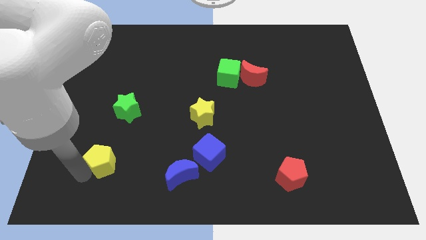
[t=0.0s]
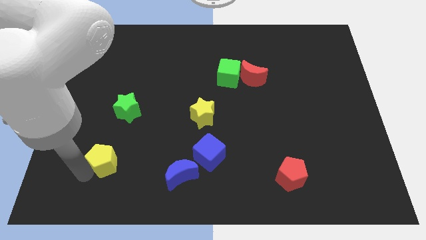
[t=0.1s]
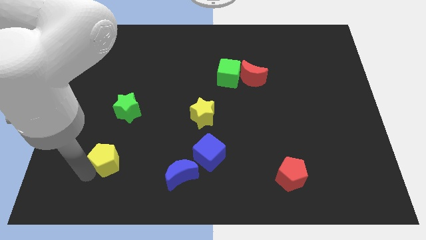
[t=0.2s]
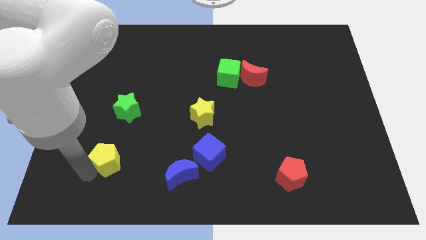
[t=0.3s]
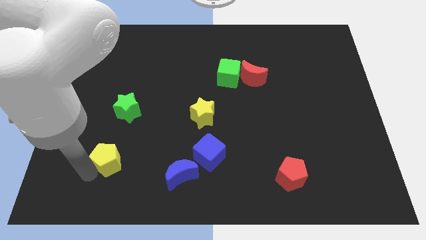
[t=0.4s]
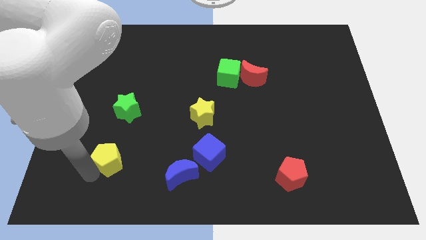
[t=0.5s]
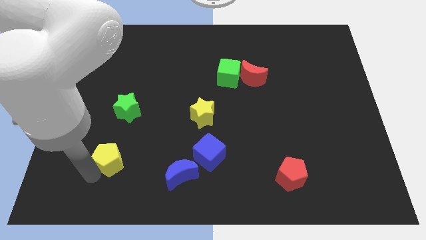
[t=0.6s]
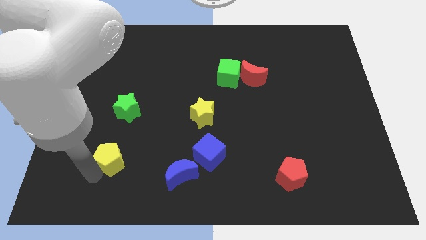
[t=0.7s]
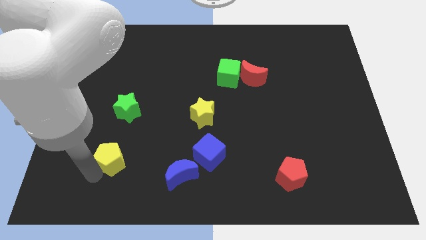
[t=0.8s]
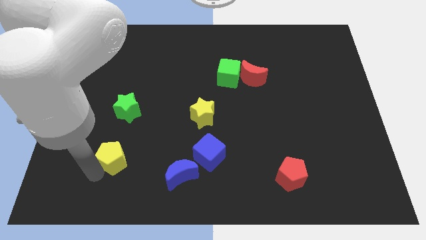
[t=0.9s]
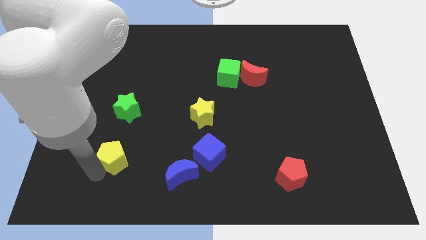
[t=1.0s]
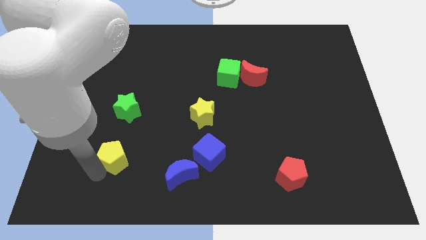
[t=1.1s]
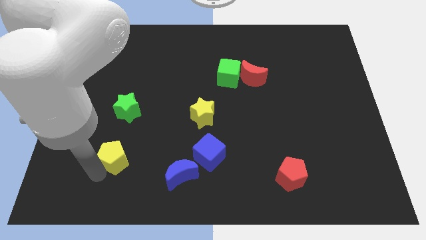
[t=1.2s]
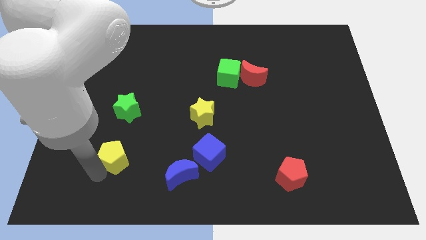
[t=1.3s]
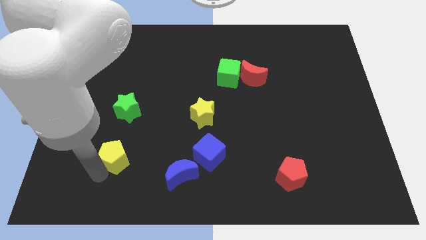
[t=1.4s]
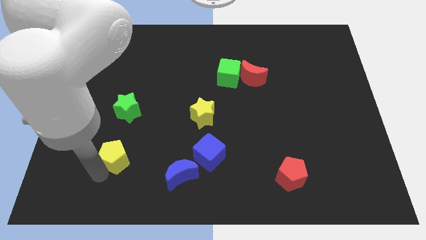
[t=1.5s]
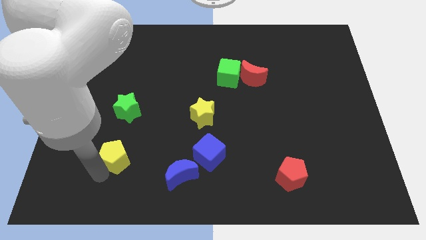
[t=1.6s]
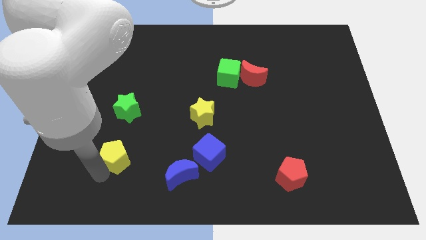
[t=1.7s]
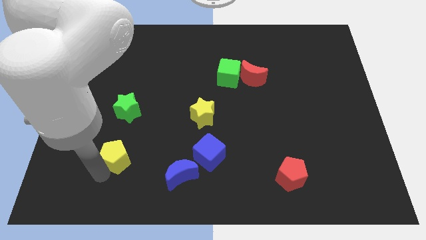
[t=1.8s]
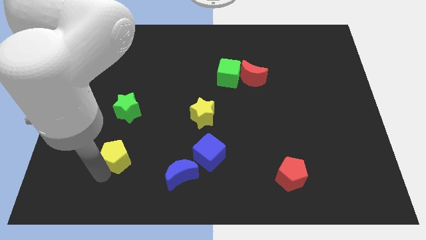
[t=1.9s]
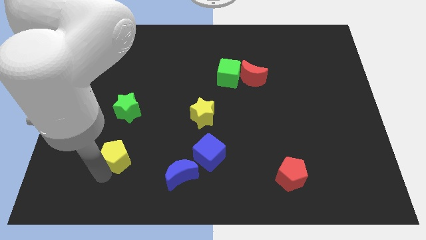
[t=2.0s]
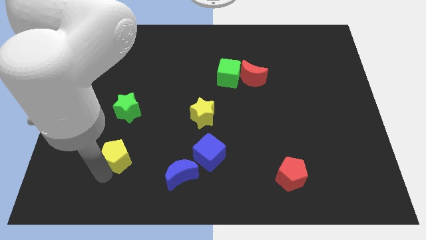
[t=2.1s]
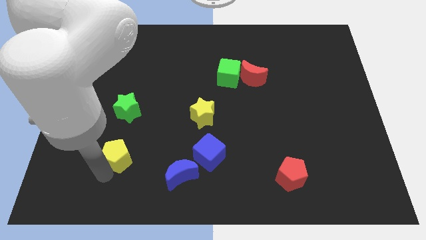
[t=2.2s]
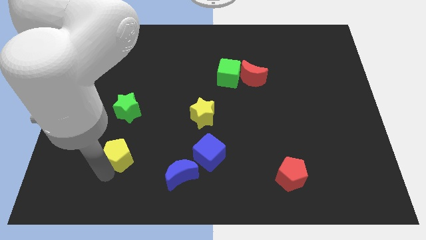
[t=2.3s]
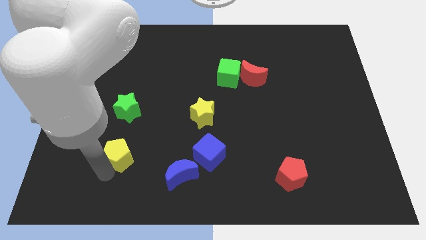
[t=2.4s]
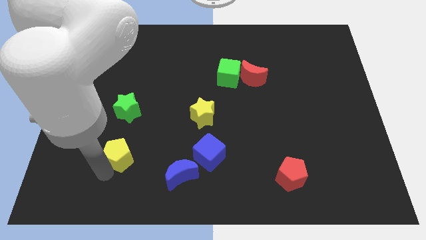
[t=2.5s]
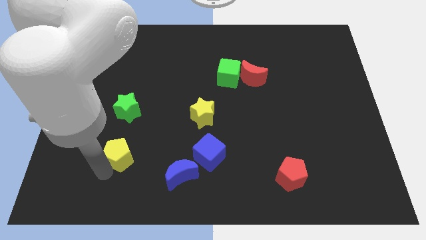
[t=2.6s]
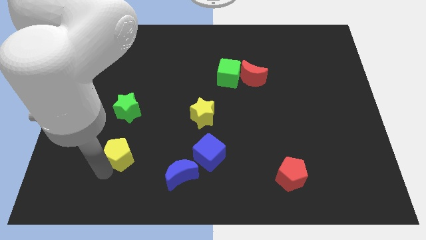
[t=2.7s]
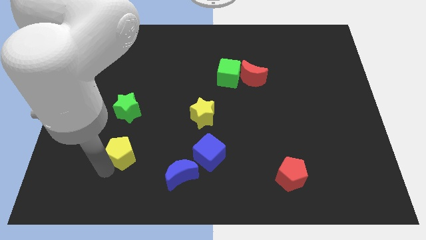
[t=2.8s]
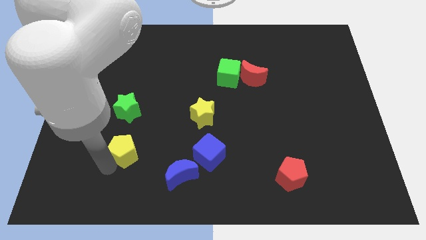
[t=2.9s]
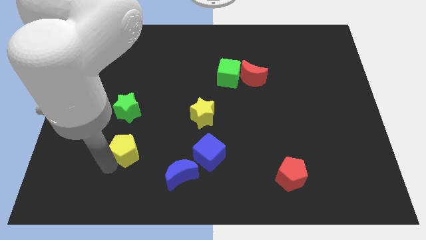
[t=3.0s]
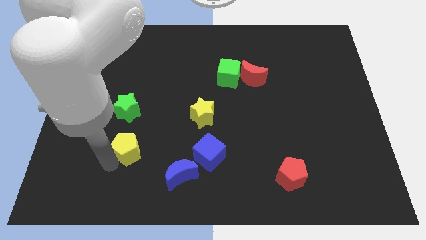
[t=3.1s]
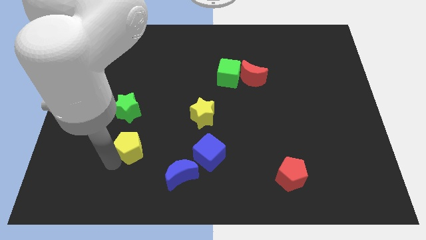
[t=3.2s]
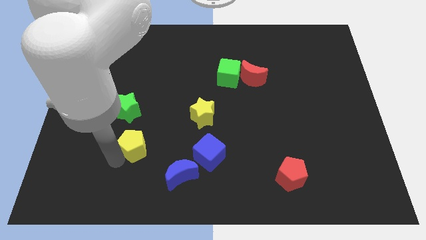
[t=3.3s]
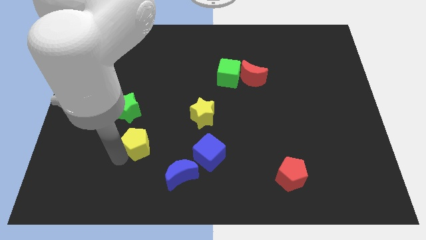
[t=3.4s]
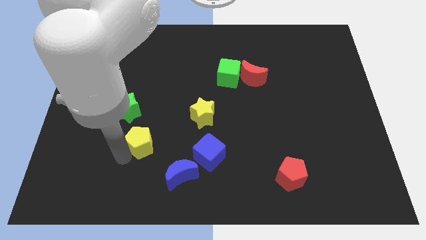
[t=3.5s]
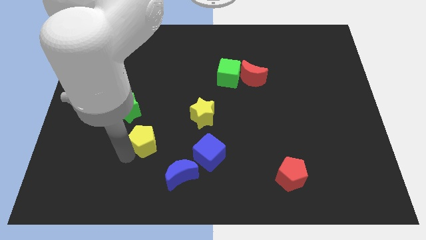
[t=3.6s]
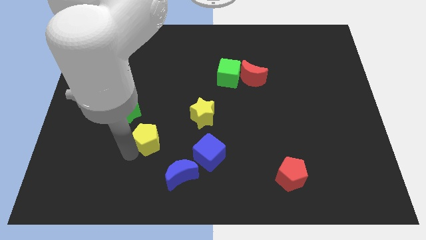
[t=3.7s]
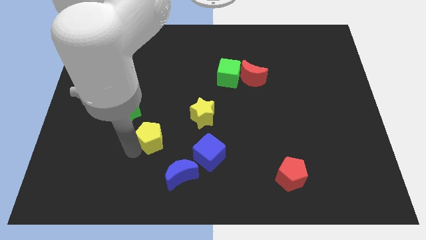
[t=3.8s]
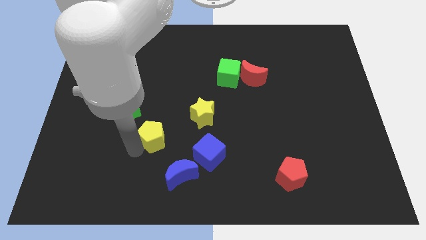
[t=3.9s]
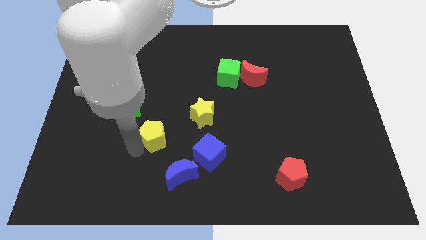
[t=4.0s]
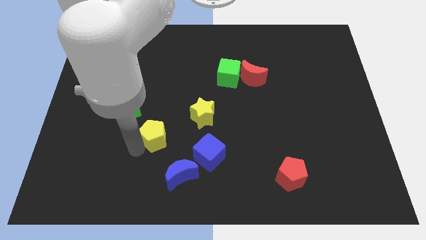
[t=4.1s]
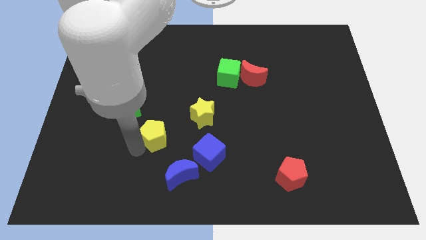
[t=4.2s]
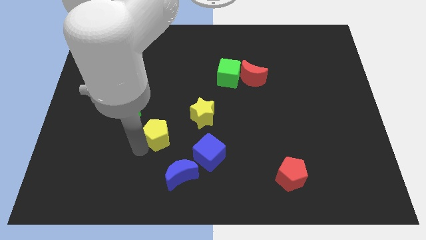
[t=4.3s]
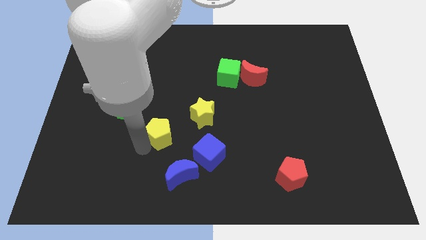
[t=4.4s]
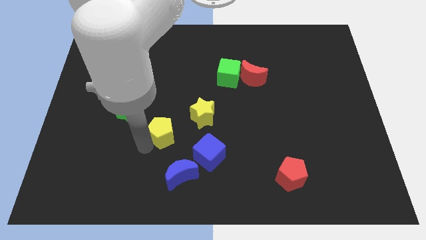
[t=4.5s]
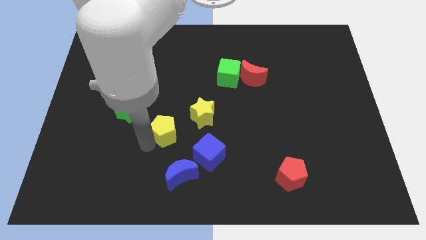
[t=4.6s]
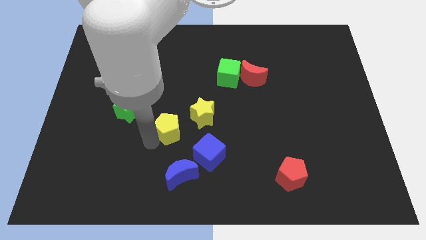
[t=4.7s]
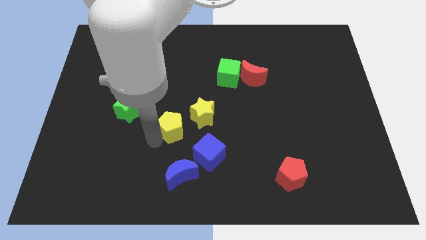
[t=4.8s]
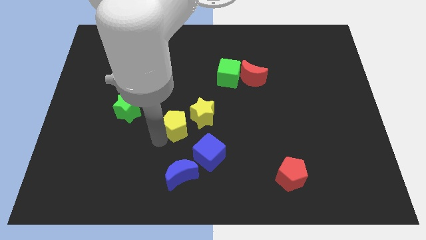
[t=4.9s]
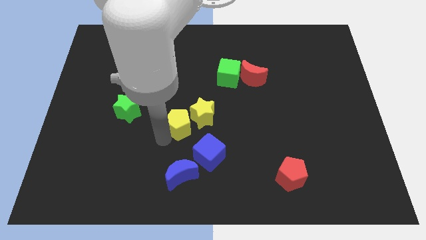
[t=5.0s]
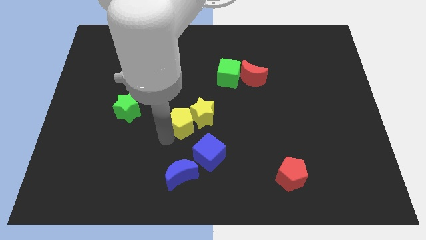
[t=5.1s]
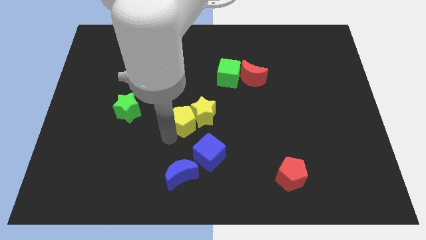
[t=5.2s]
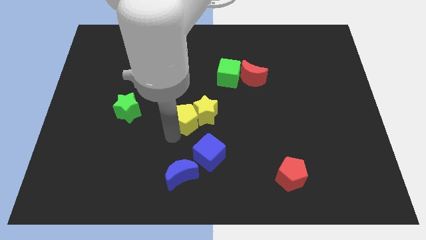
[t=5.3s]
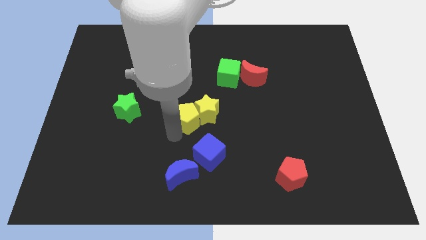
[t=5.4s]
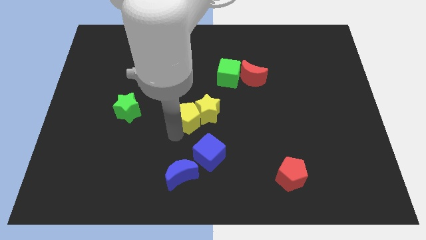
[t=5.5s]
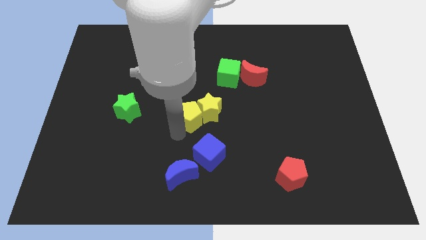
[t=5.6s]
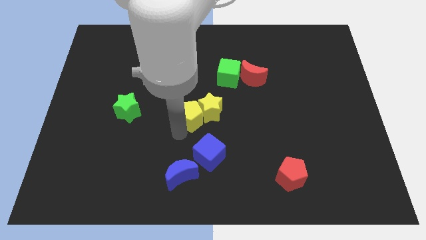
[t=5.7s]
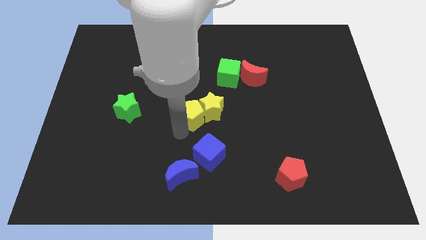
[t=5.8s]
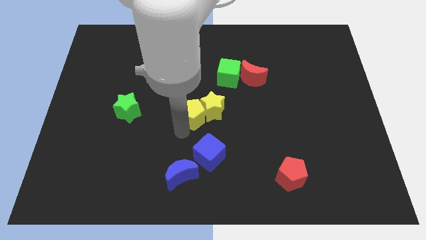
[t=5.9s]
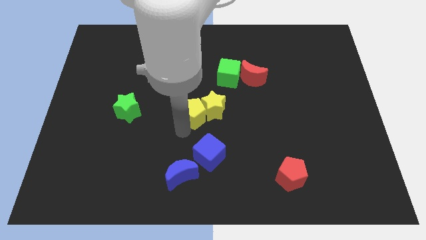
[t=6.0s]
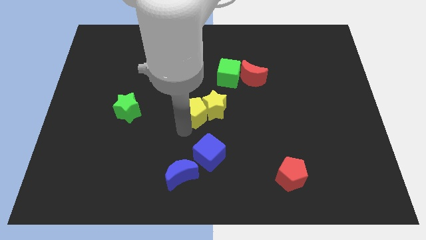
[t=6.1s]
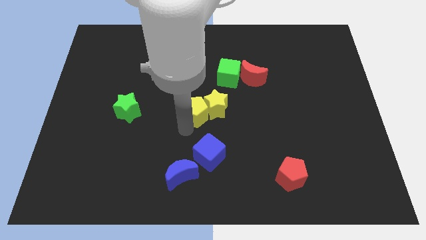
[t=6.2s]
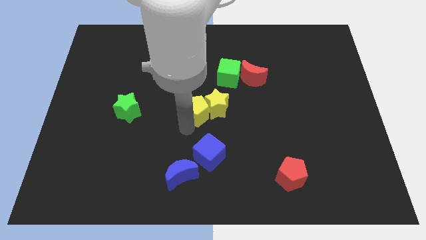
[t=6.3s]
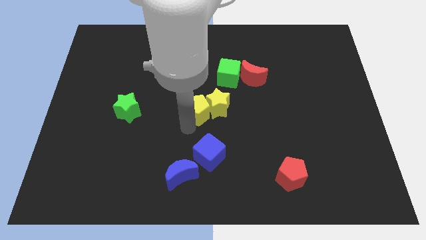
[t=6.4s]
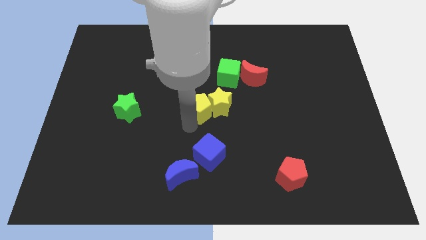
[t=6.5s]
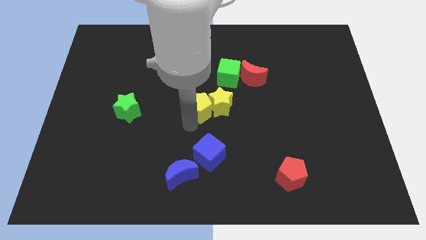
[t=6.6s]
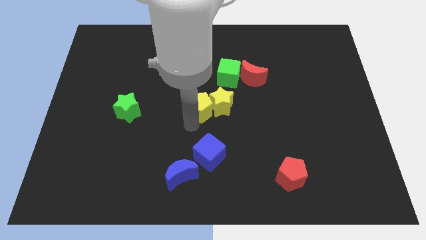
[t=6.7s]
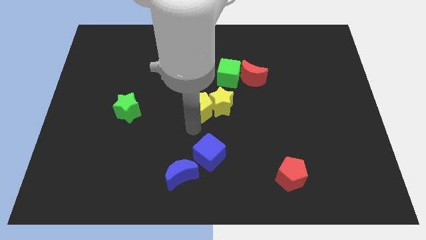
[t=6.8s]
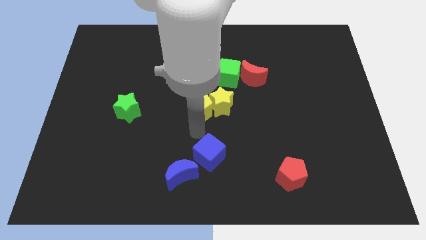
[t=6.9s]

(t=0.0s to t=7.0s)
place the yellow pentagon left to the yellow star

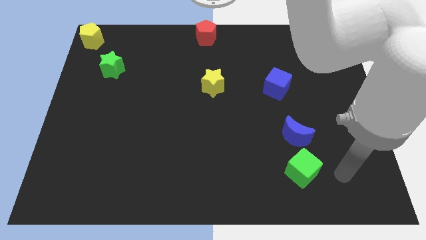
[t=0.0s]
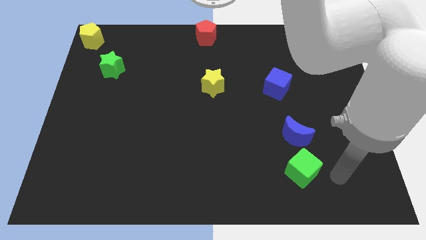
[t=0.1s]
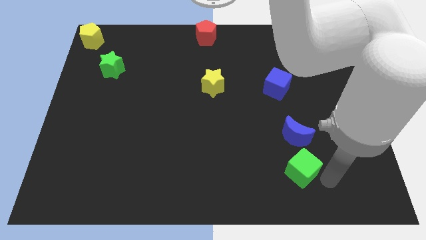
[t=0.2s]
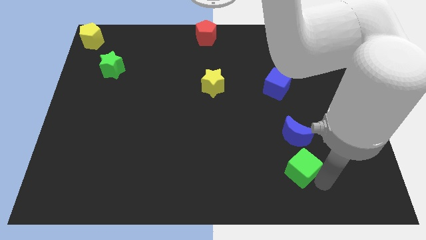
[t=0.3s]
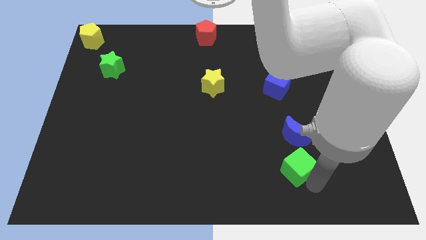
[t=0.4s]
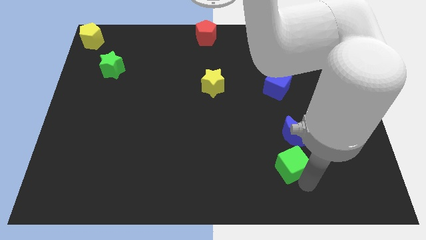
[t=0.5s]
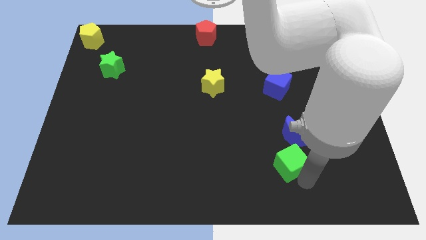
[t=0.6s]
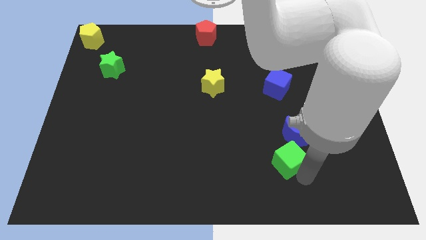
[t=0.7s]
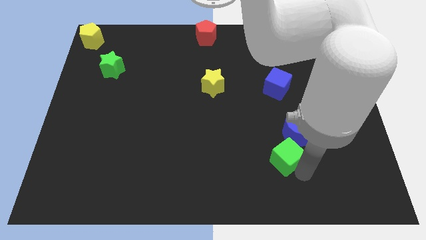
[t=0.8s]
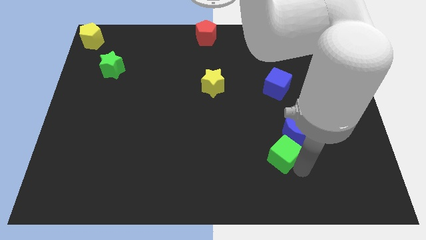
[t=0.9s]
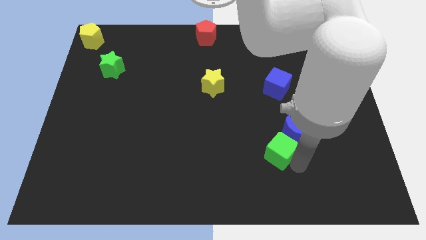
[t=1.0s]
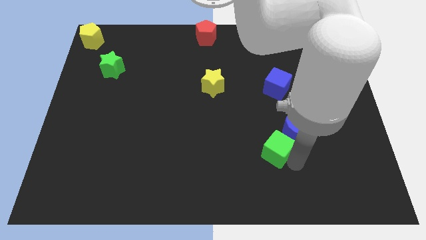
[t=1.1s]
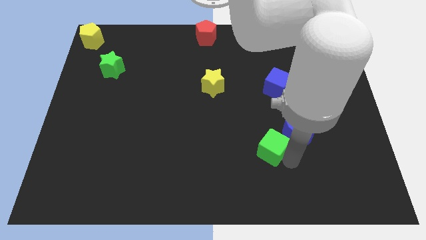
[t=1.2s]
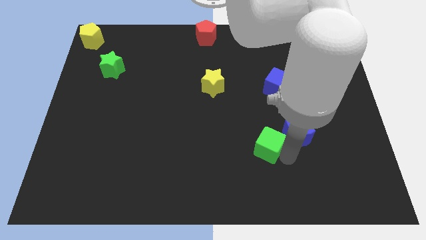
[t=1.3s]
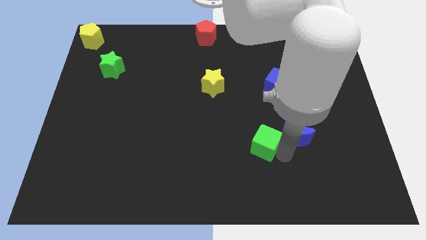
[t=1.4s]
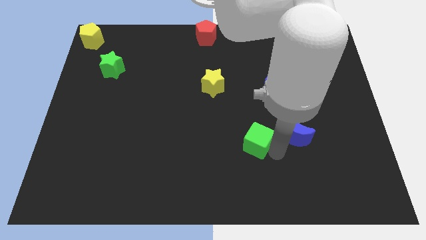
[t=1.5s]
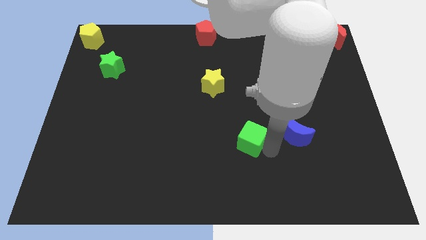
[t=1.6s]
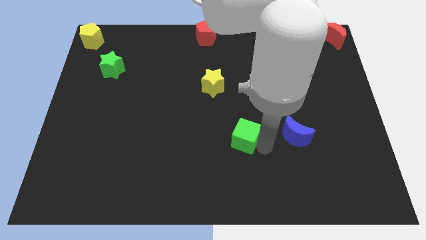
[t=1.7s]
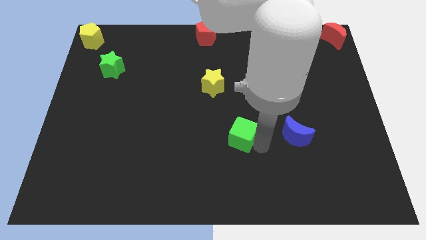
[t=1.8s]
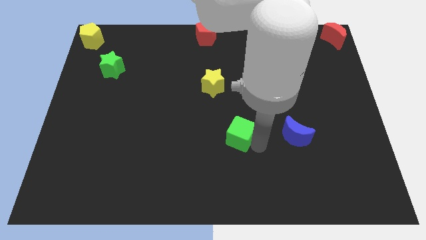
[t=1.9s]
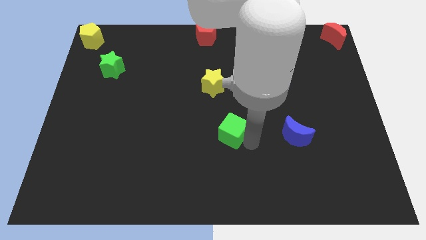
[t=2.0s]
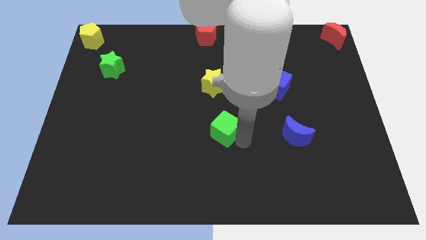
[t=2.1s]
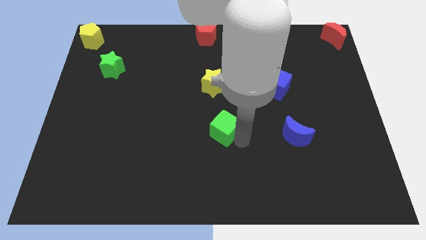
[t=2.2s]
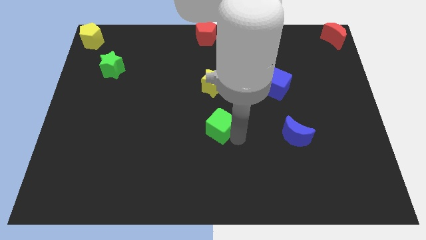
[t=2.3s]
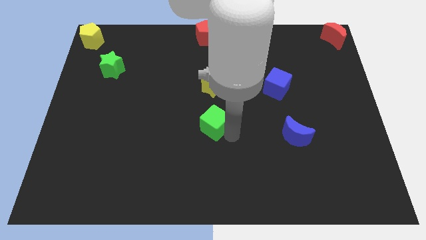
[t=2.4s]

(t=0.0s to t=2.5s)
place the green cube to the bottom of the yellow star
